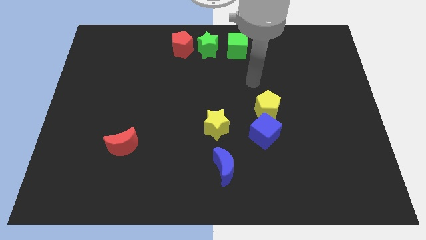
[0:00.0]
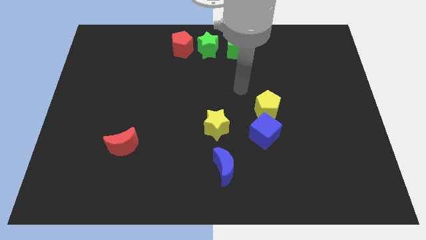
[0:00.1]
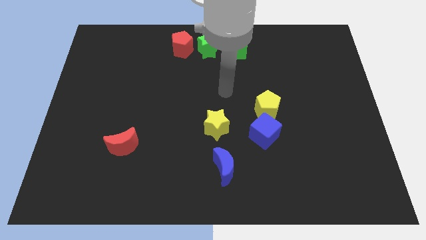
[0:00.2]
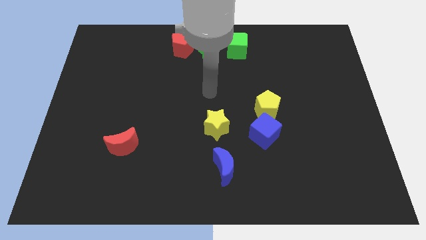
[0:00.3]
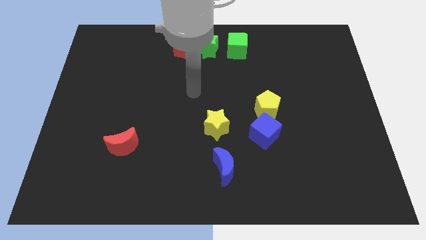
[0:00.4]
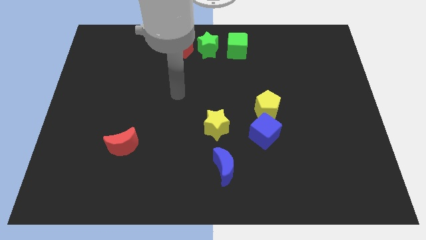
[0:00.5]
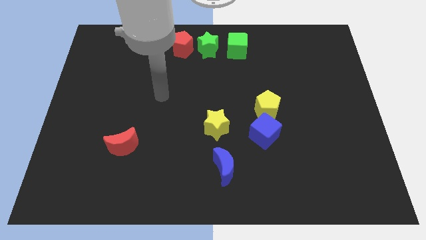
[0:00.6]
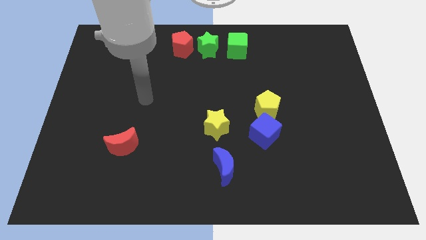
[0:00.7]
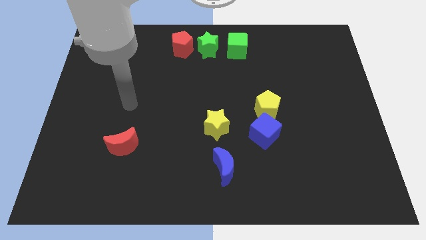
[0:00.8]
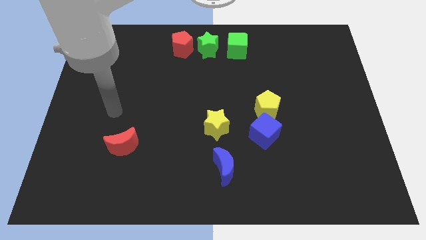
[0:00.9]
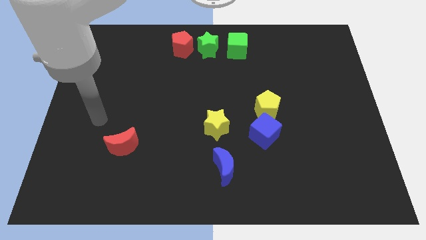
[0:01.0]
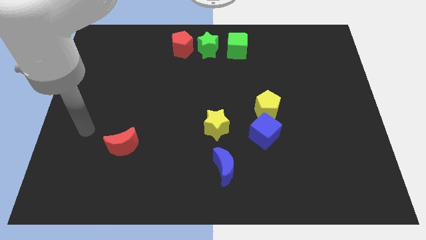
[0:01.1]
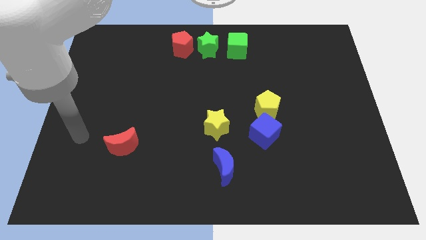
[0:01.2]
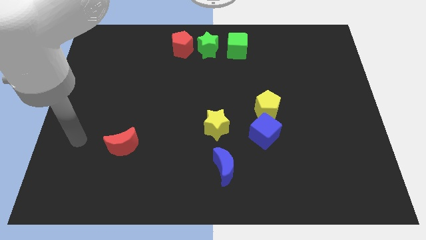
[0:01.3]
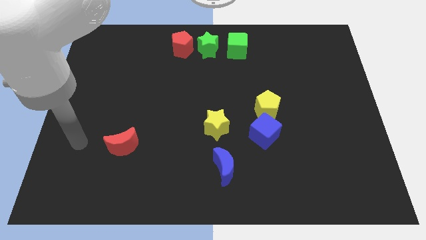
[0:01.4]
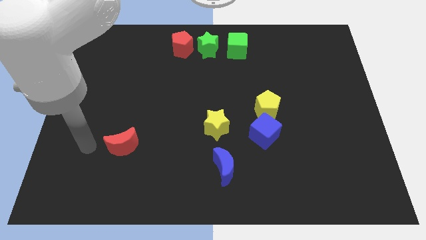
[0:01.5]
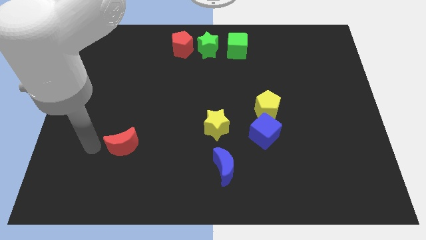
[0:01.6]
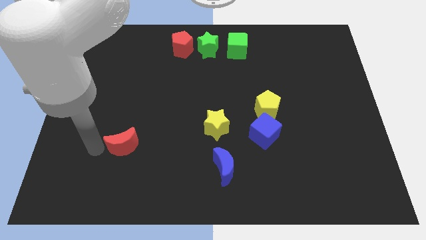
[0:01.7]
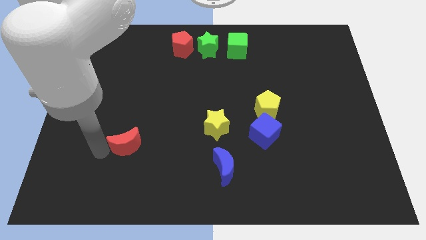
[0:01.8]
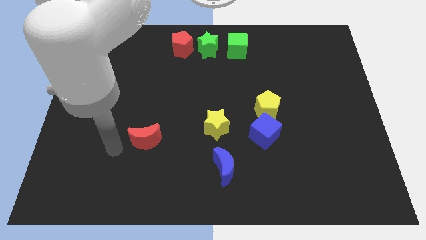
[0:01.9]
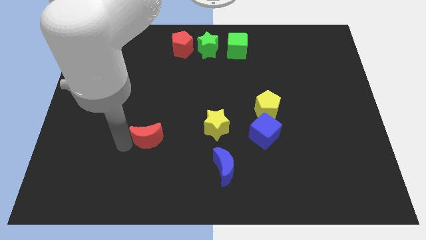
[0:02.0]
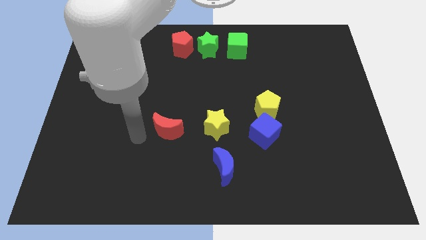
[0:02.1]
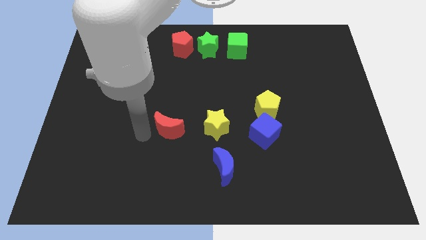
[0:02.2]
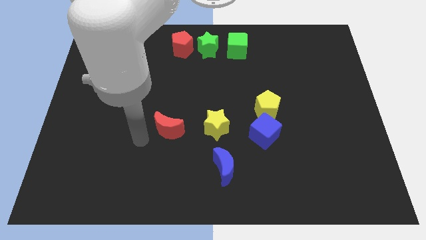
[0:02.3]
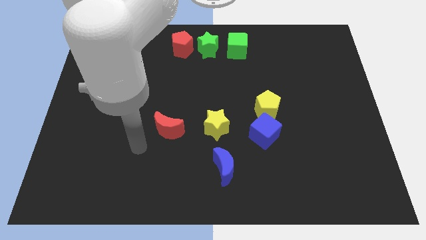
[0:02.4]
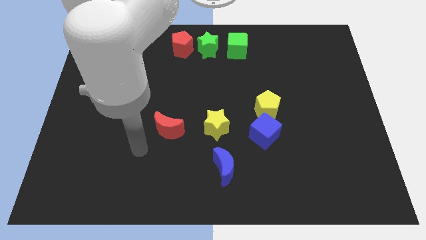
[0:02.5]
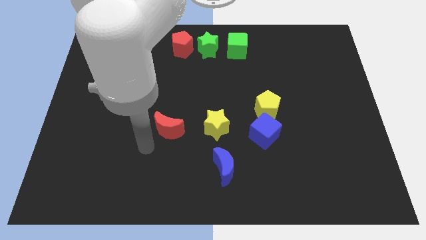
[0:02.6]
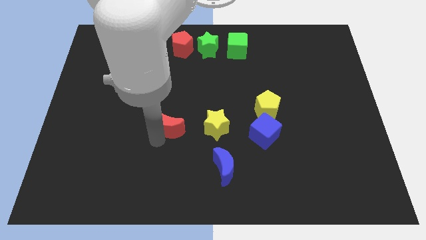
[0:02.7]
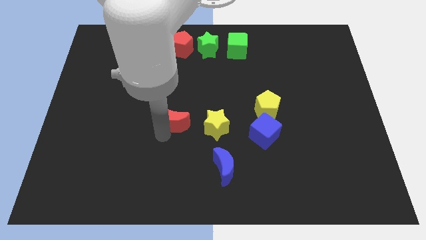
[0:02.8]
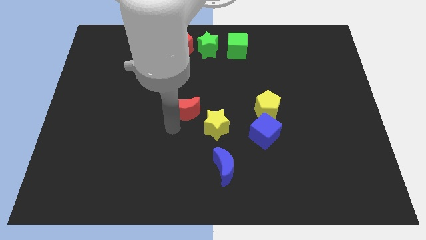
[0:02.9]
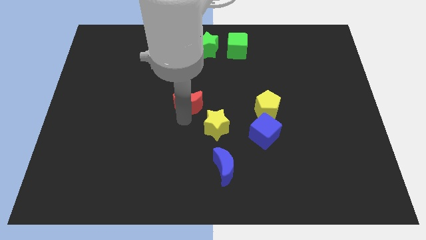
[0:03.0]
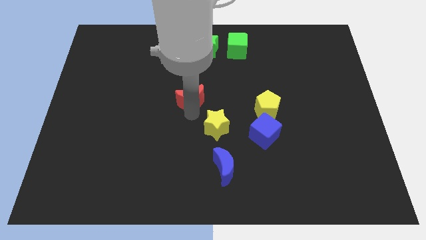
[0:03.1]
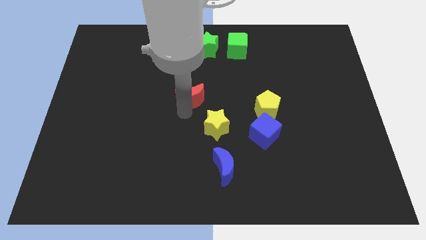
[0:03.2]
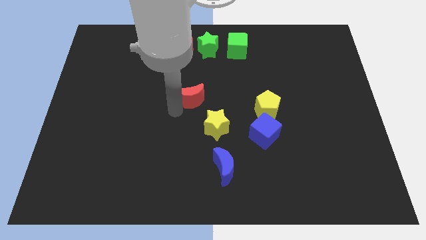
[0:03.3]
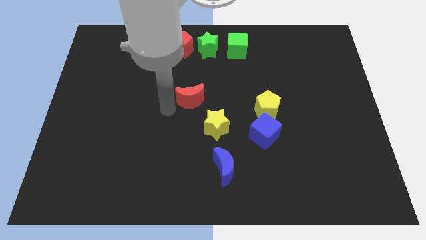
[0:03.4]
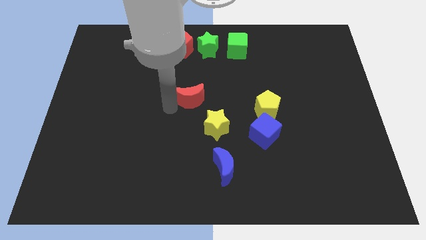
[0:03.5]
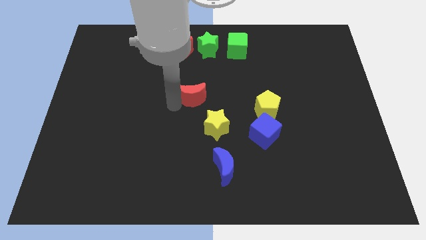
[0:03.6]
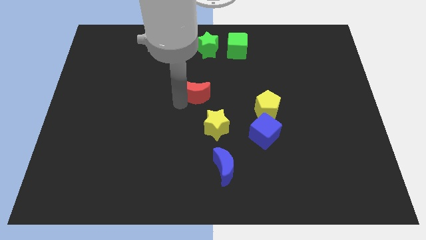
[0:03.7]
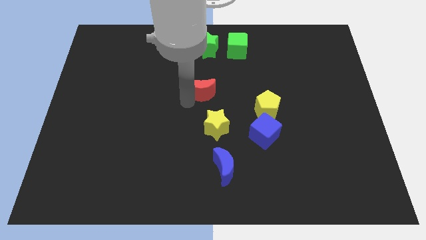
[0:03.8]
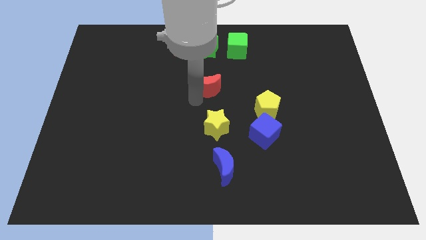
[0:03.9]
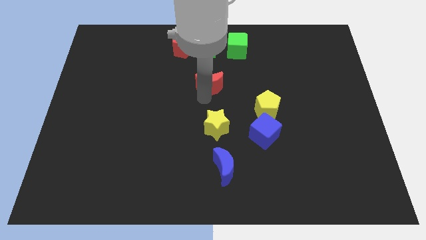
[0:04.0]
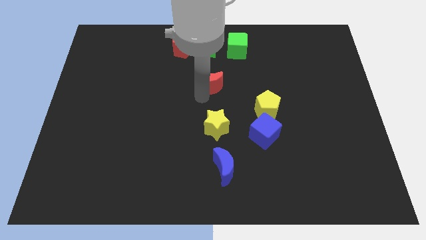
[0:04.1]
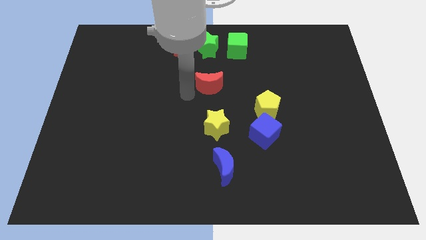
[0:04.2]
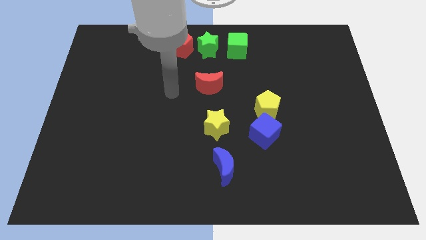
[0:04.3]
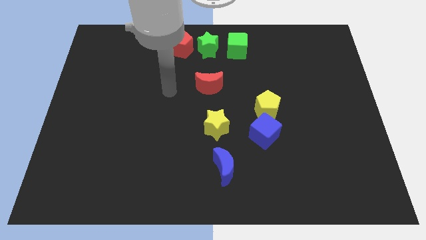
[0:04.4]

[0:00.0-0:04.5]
place the red moon in between the green star and yellow star

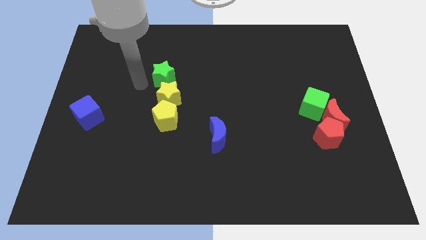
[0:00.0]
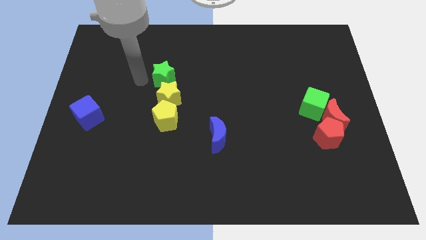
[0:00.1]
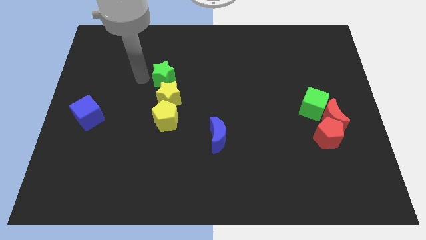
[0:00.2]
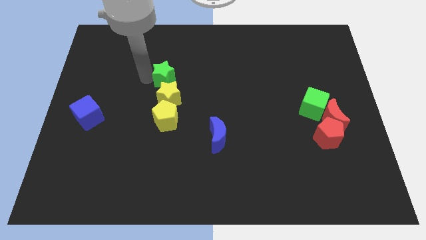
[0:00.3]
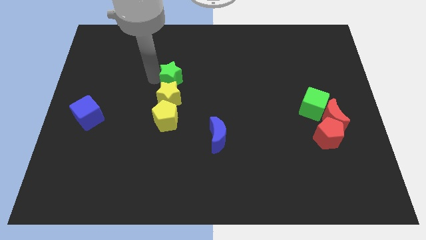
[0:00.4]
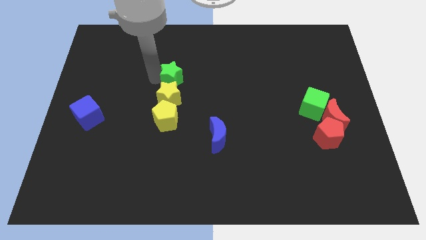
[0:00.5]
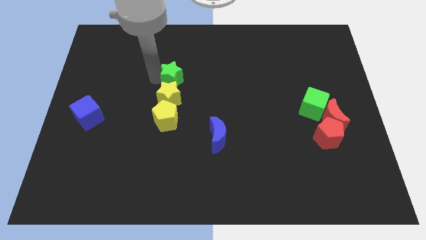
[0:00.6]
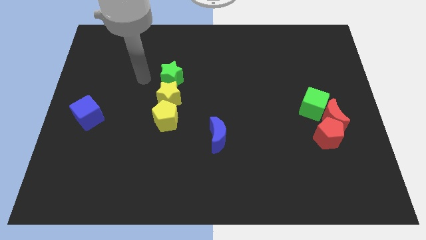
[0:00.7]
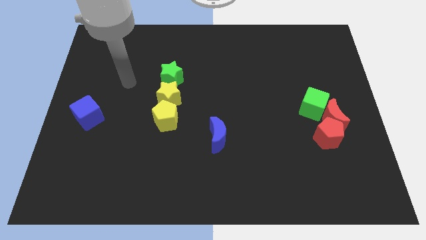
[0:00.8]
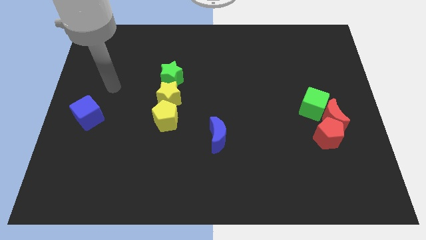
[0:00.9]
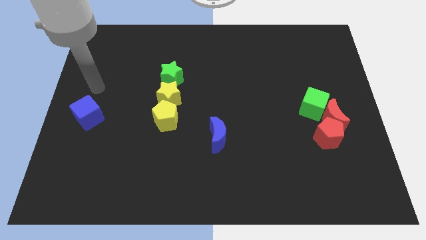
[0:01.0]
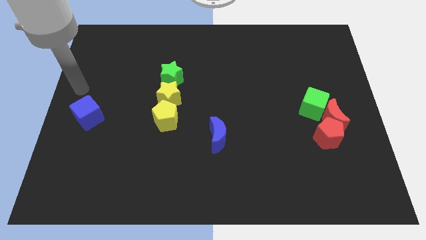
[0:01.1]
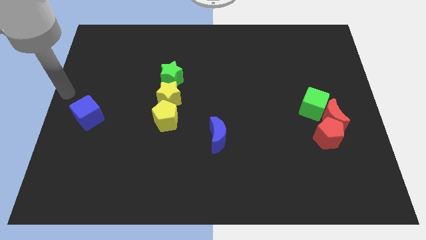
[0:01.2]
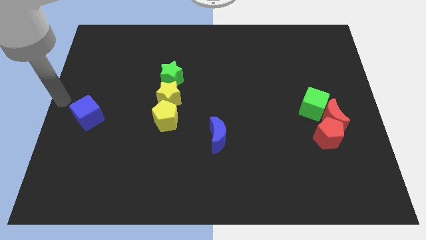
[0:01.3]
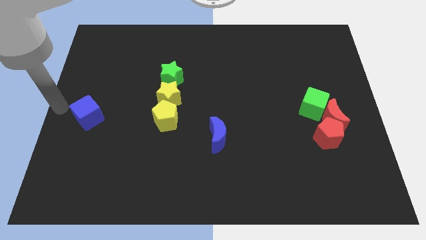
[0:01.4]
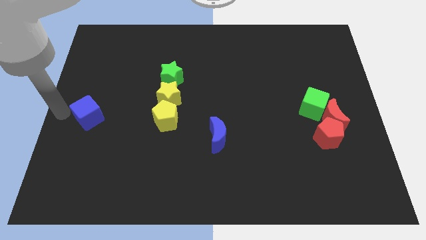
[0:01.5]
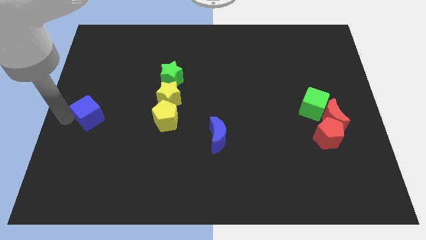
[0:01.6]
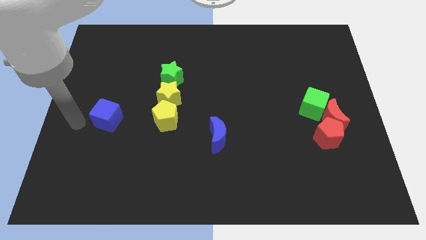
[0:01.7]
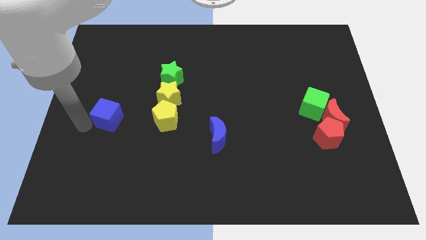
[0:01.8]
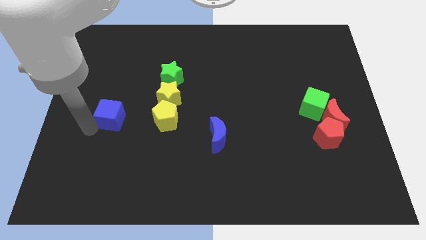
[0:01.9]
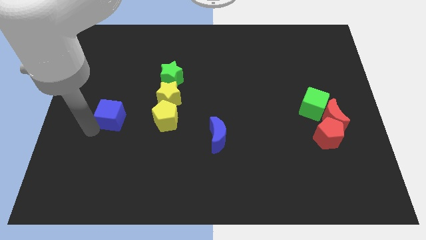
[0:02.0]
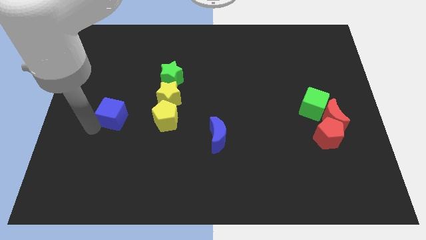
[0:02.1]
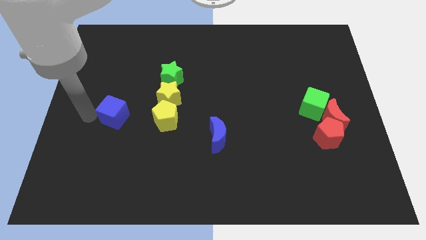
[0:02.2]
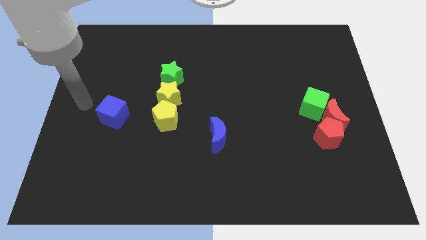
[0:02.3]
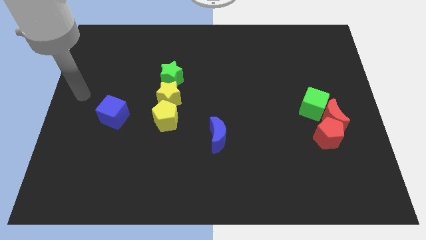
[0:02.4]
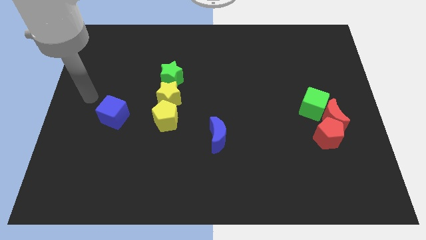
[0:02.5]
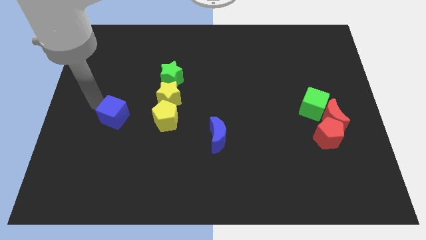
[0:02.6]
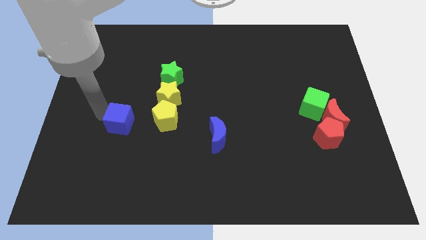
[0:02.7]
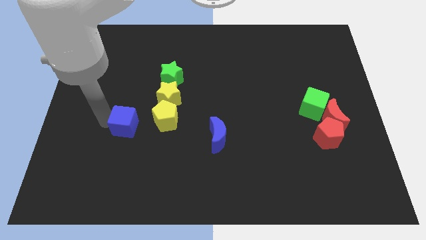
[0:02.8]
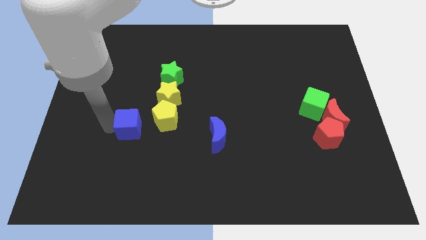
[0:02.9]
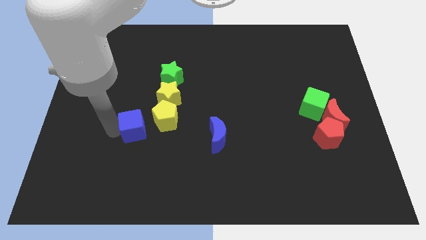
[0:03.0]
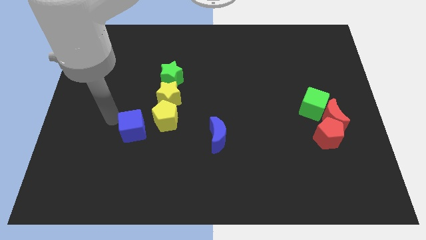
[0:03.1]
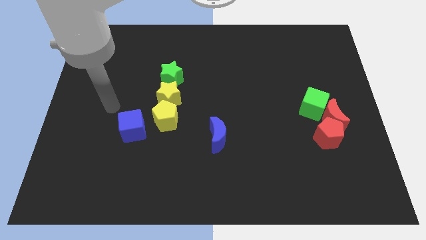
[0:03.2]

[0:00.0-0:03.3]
place the blue cube left to the yellow pentagon

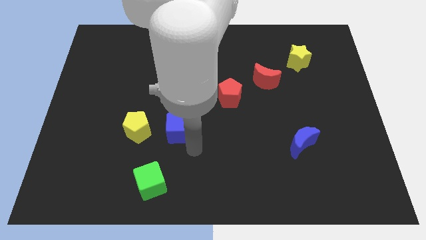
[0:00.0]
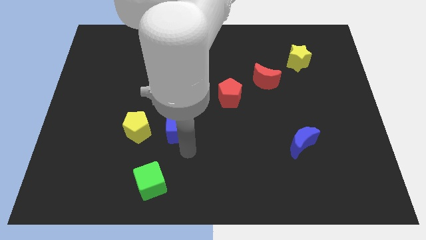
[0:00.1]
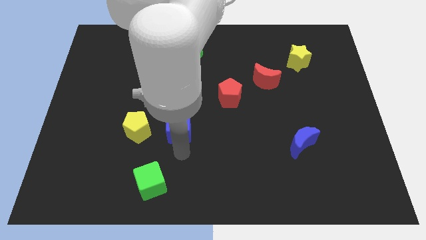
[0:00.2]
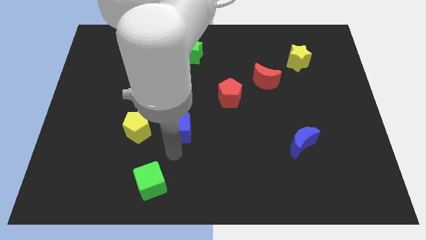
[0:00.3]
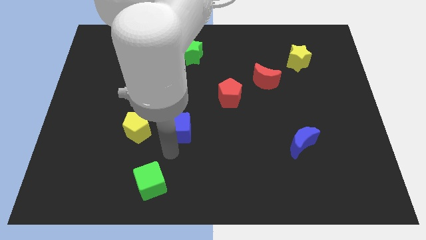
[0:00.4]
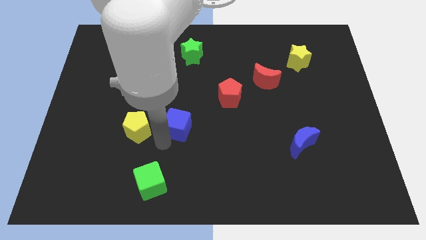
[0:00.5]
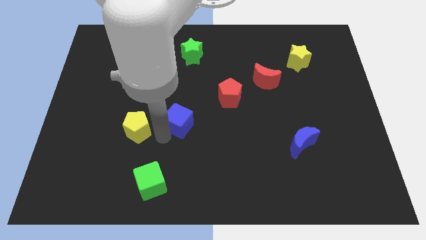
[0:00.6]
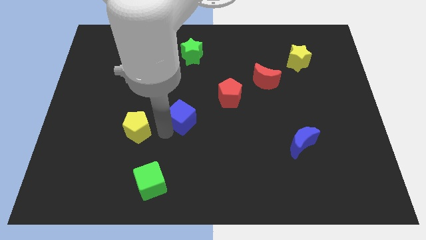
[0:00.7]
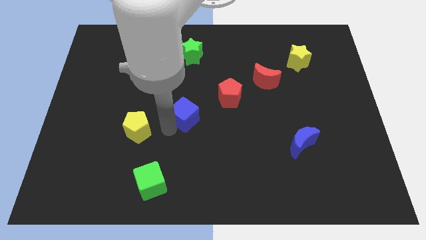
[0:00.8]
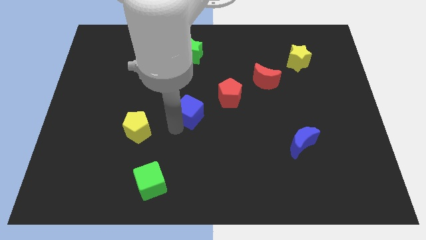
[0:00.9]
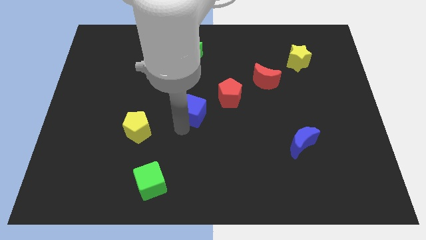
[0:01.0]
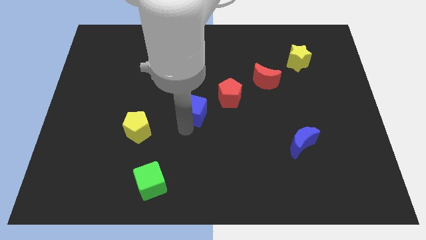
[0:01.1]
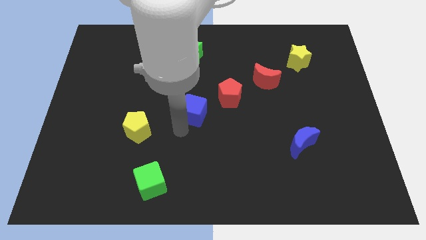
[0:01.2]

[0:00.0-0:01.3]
push the blue cube slightly upward
